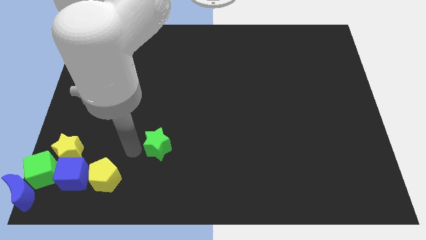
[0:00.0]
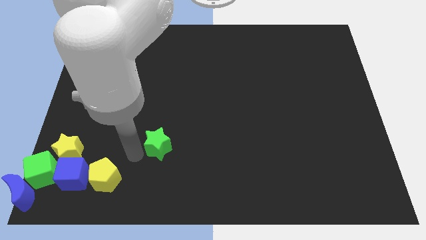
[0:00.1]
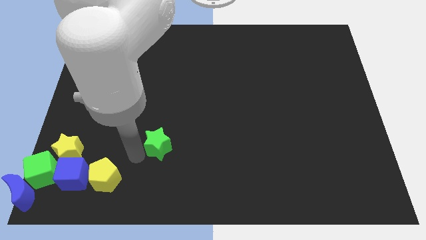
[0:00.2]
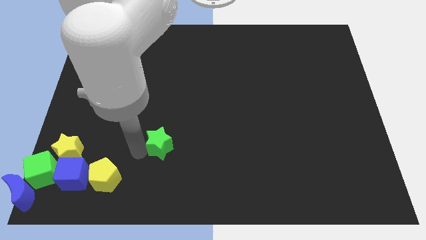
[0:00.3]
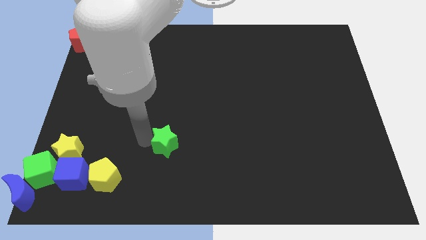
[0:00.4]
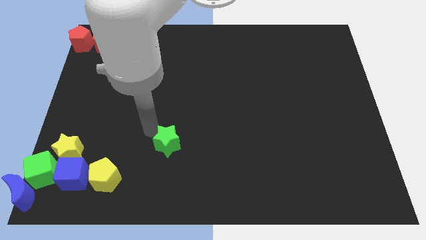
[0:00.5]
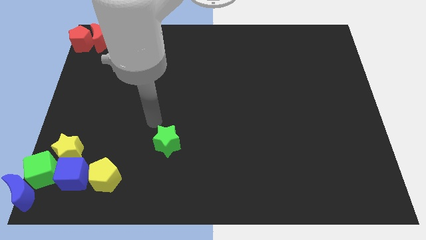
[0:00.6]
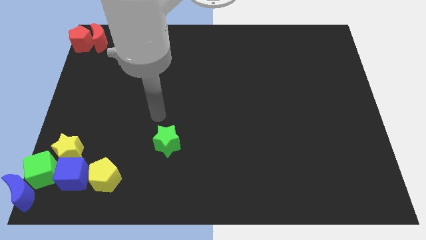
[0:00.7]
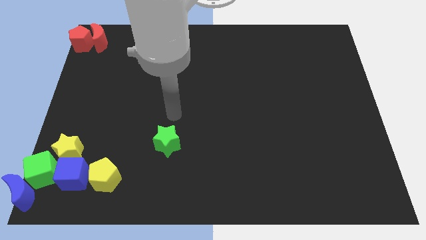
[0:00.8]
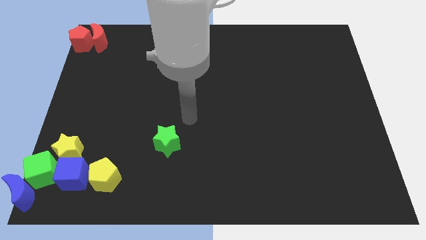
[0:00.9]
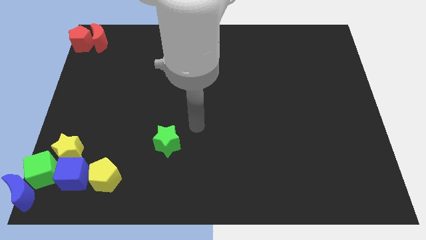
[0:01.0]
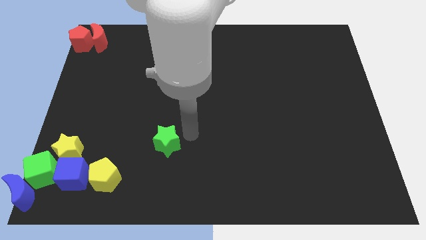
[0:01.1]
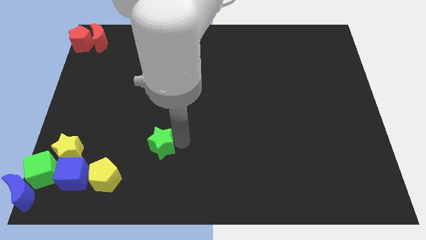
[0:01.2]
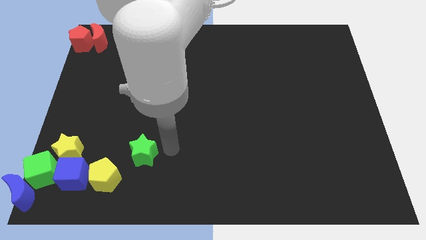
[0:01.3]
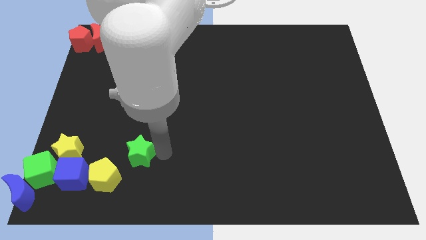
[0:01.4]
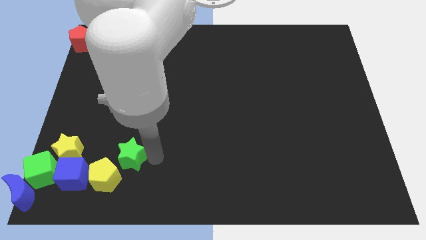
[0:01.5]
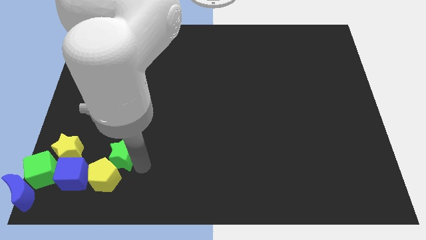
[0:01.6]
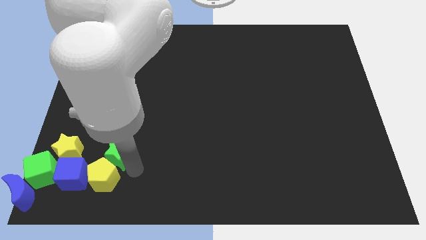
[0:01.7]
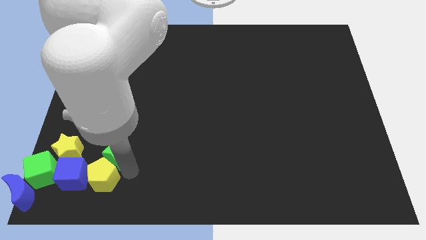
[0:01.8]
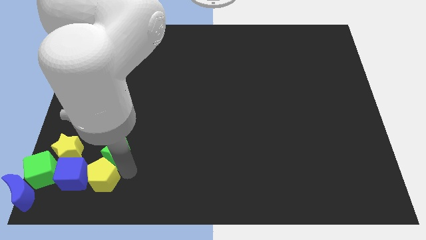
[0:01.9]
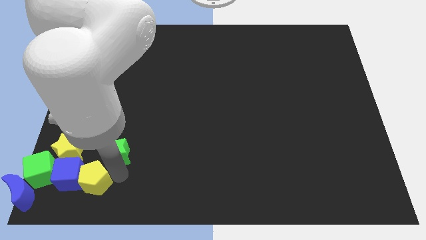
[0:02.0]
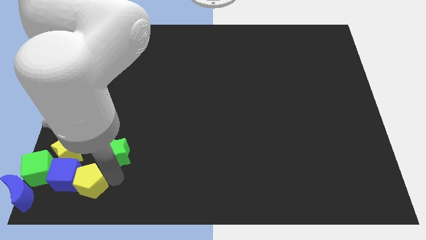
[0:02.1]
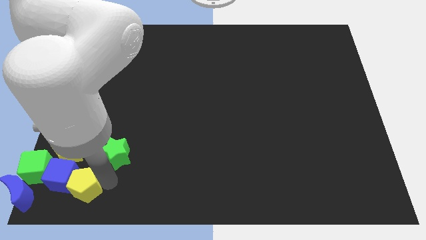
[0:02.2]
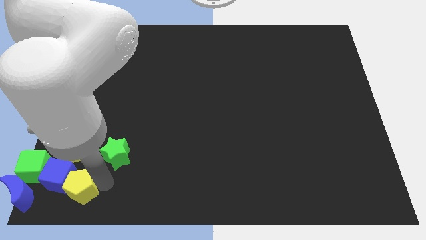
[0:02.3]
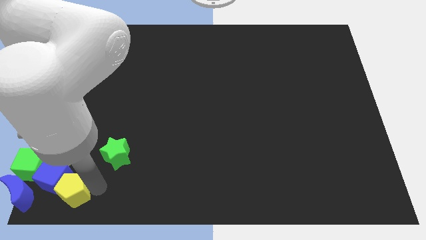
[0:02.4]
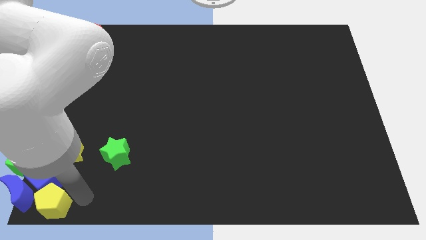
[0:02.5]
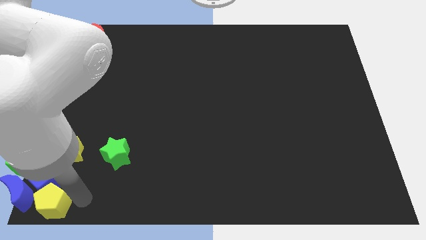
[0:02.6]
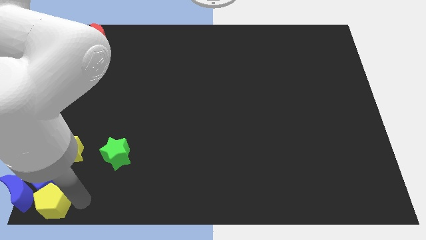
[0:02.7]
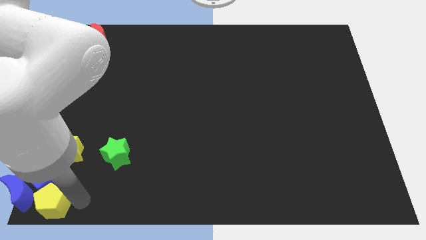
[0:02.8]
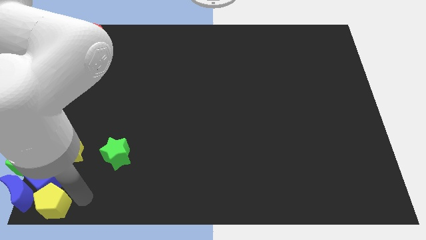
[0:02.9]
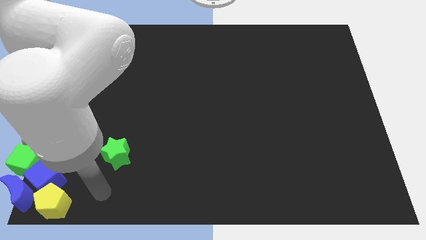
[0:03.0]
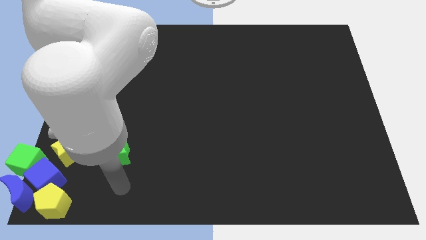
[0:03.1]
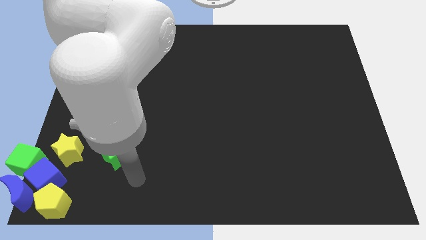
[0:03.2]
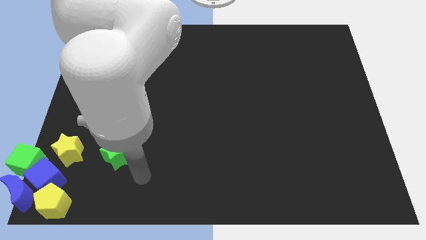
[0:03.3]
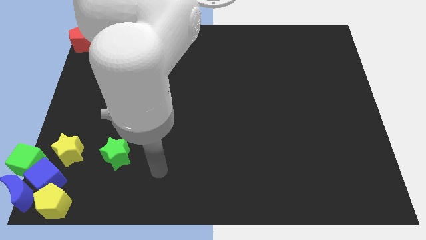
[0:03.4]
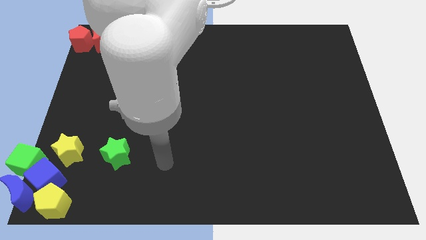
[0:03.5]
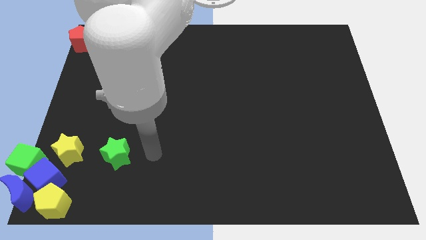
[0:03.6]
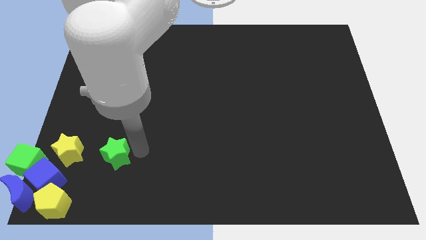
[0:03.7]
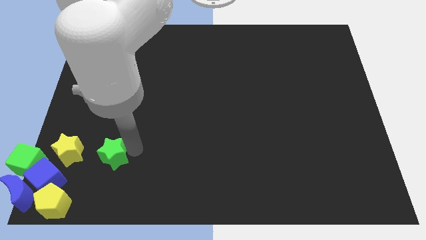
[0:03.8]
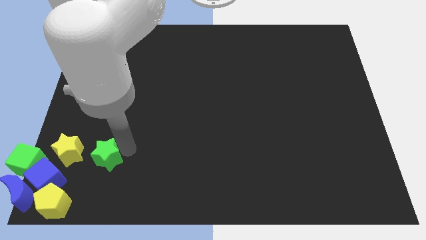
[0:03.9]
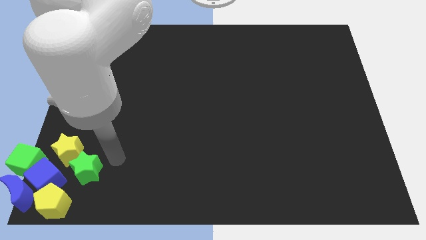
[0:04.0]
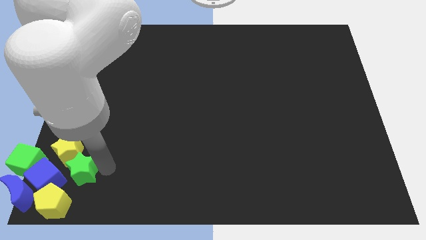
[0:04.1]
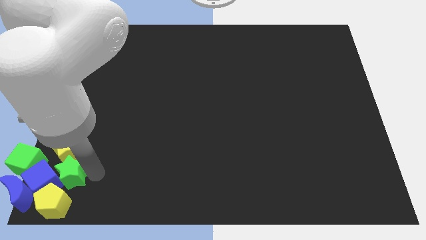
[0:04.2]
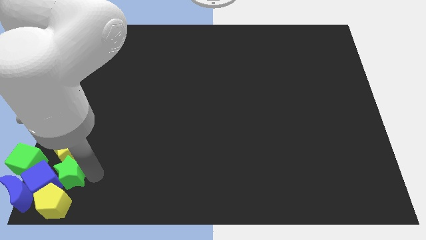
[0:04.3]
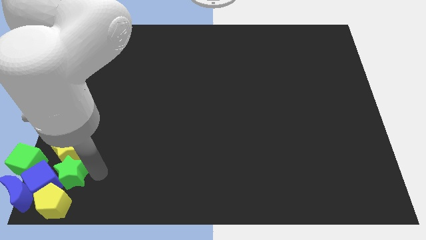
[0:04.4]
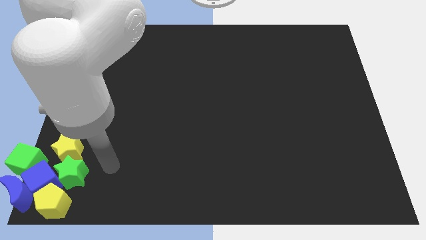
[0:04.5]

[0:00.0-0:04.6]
push the green star into the group of blocks at the bottom left of the board

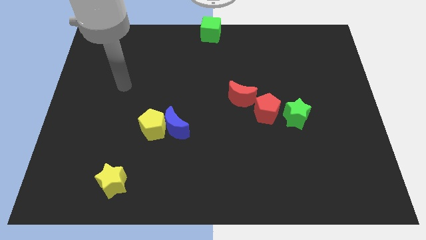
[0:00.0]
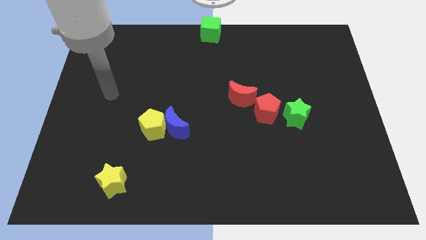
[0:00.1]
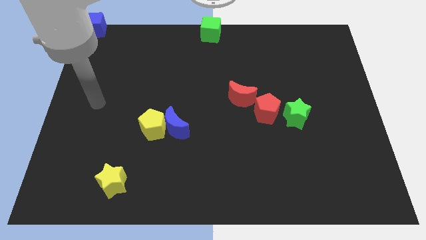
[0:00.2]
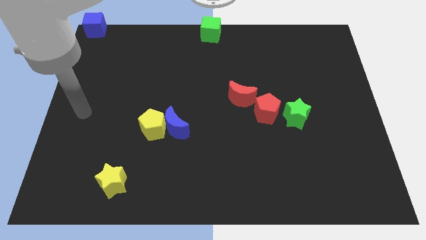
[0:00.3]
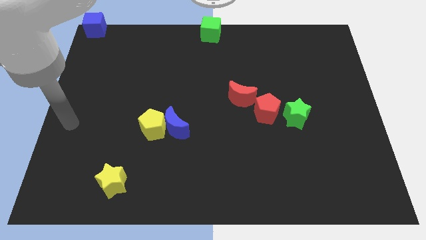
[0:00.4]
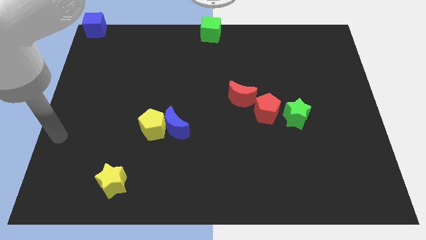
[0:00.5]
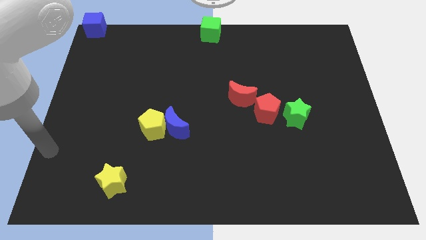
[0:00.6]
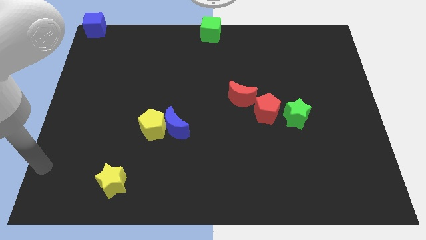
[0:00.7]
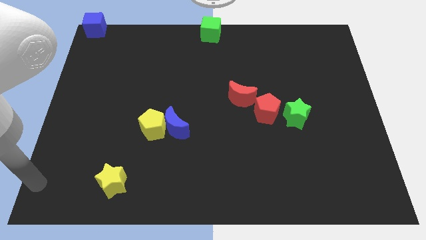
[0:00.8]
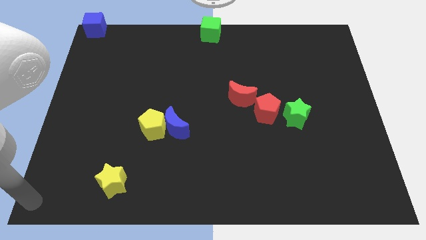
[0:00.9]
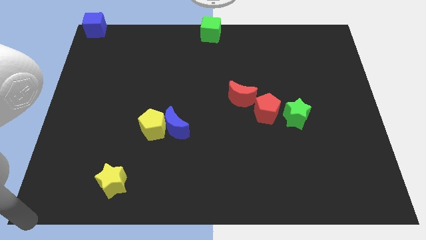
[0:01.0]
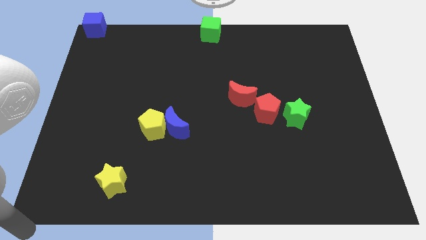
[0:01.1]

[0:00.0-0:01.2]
move the arm to the bottom left corner of the board

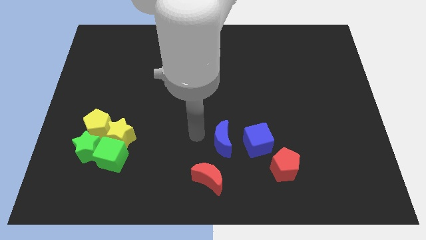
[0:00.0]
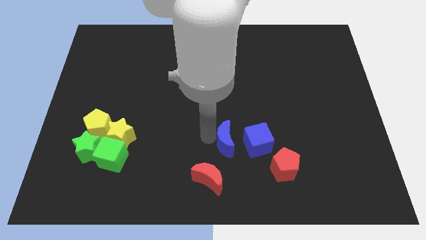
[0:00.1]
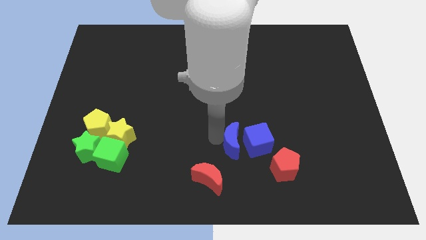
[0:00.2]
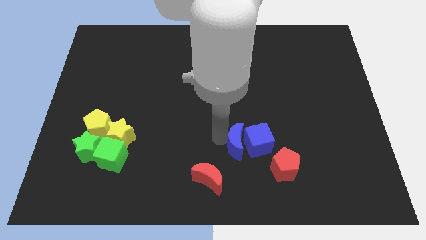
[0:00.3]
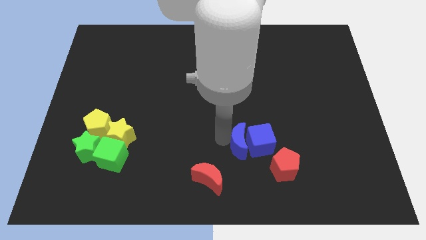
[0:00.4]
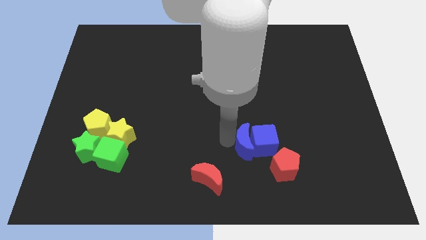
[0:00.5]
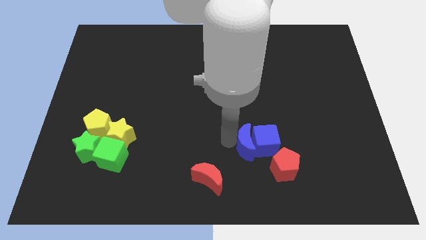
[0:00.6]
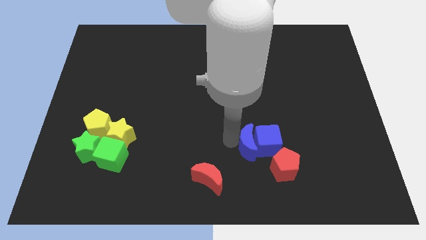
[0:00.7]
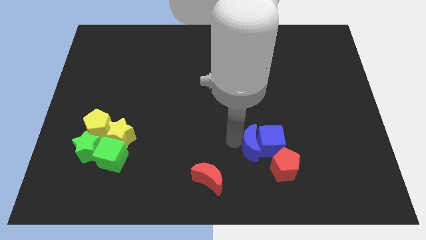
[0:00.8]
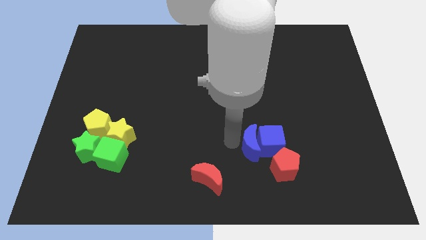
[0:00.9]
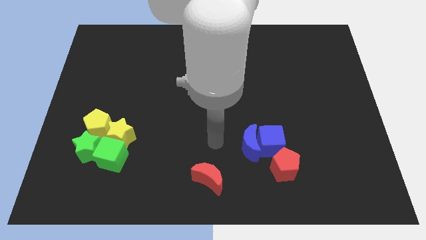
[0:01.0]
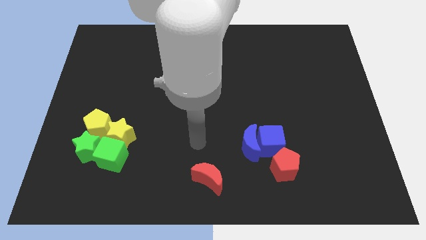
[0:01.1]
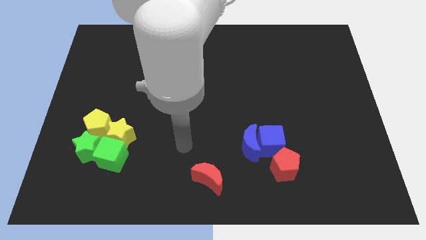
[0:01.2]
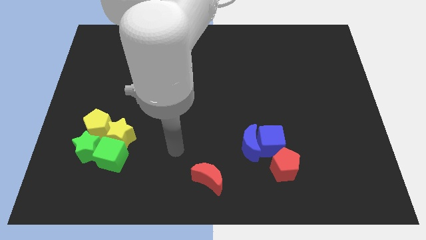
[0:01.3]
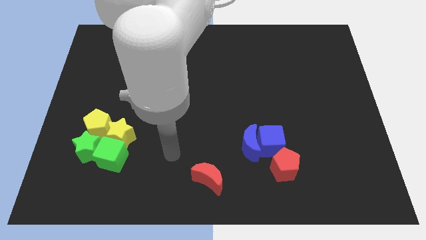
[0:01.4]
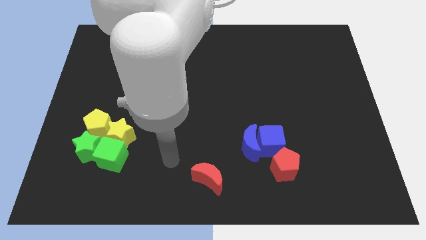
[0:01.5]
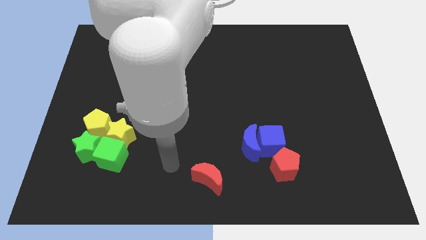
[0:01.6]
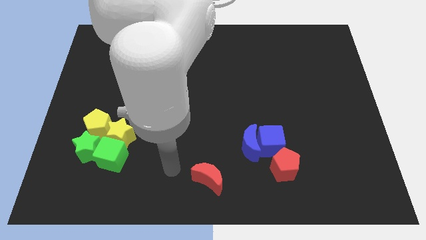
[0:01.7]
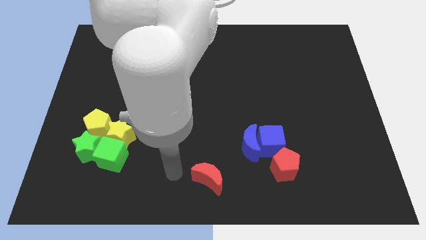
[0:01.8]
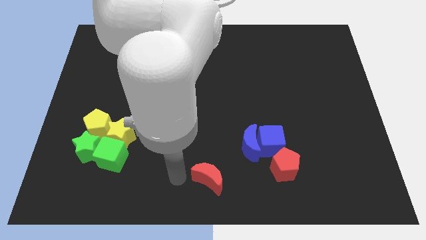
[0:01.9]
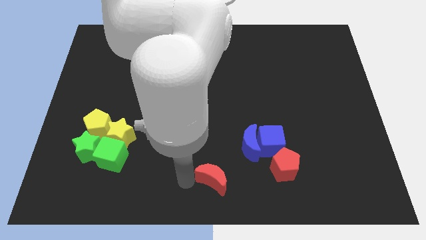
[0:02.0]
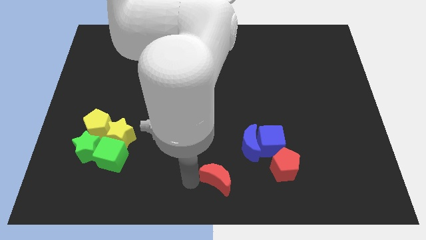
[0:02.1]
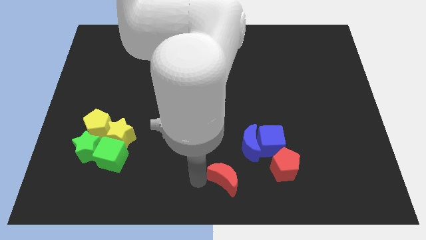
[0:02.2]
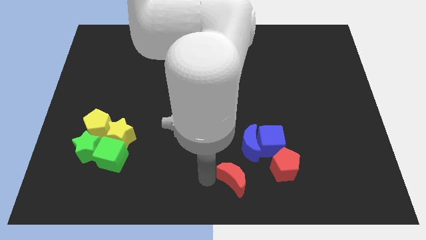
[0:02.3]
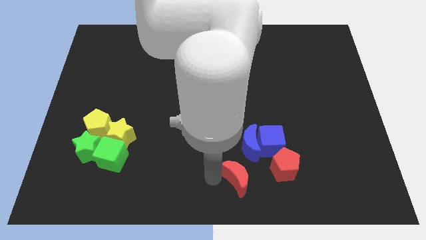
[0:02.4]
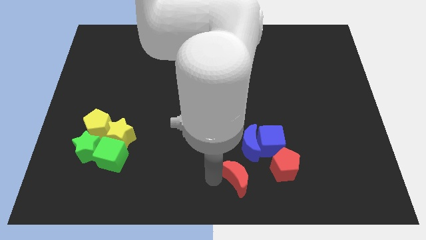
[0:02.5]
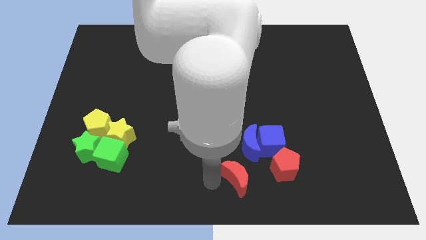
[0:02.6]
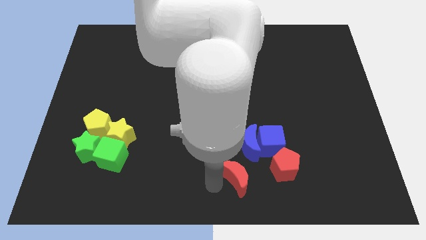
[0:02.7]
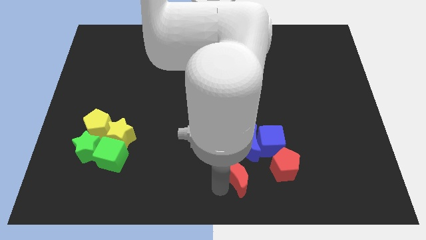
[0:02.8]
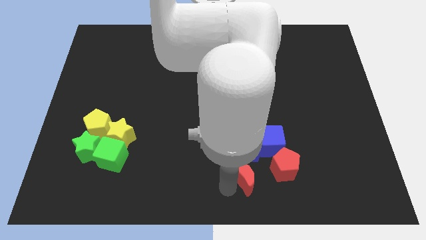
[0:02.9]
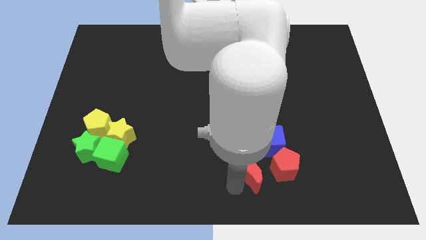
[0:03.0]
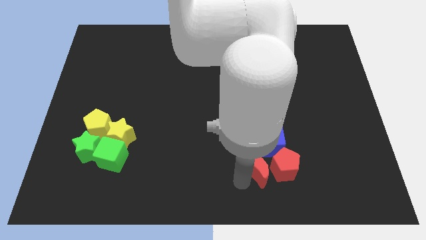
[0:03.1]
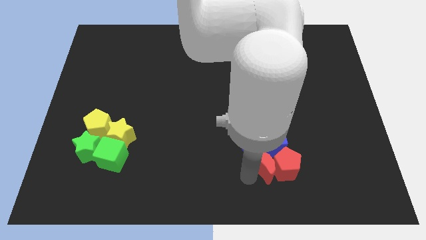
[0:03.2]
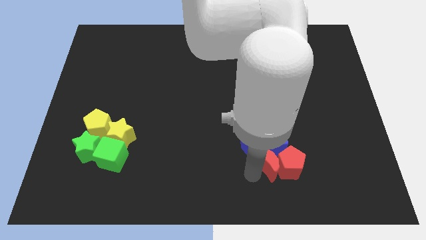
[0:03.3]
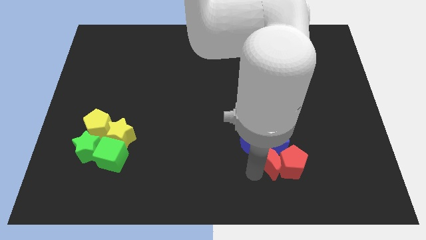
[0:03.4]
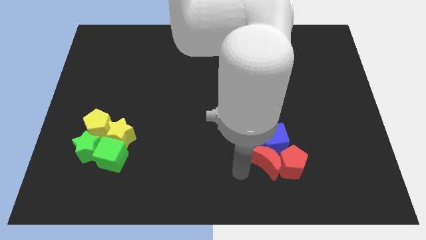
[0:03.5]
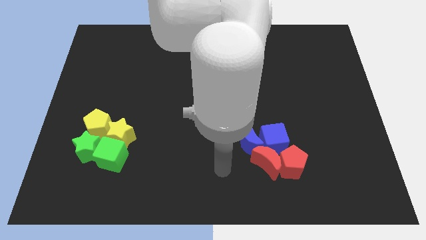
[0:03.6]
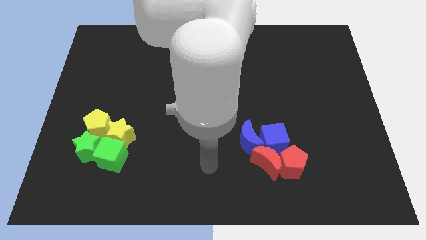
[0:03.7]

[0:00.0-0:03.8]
move crescents close to the red pentagon and the blue cube
